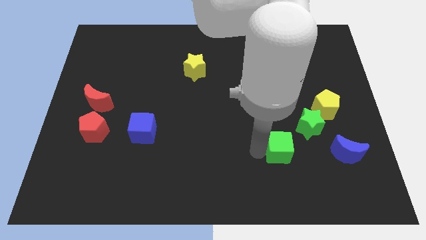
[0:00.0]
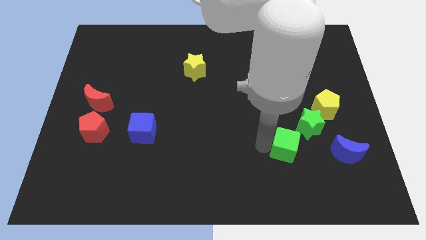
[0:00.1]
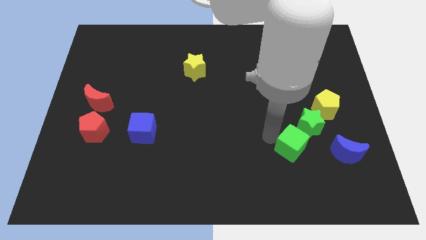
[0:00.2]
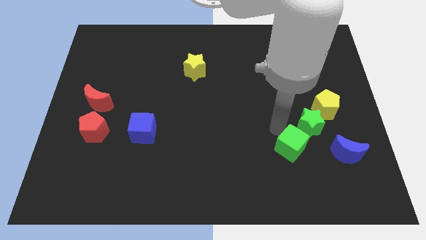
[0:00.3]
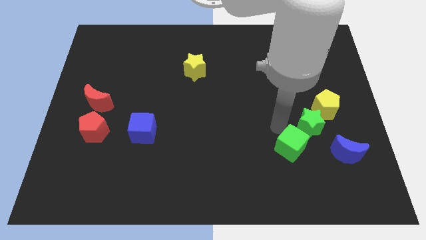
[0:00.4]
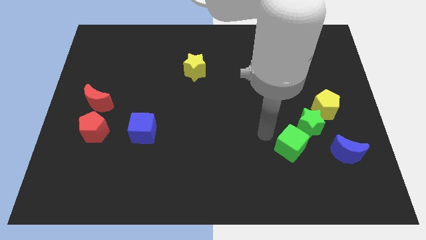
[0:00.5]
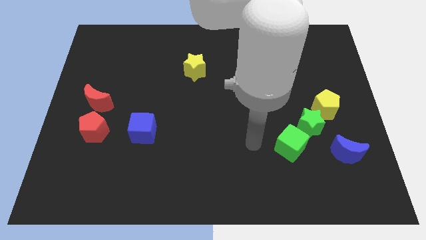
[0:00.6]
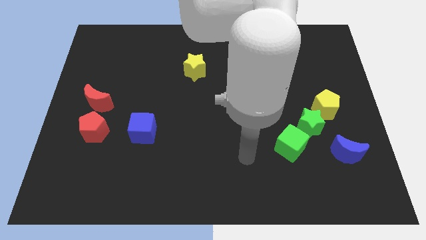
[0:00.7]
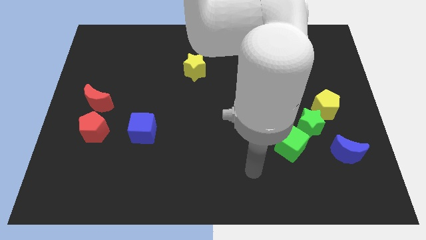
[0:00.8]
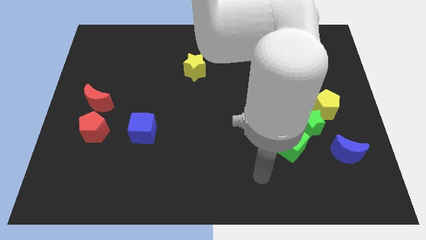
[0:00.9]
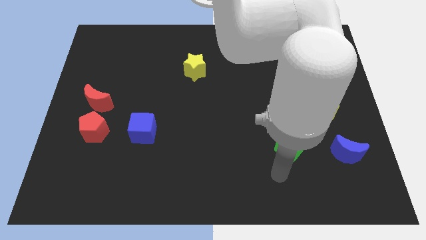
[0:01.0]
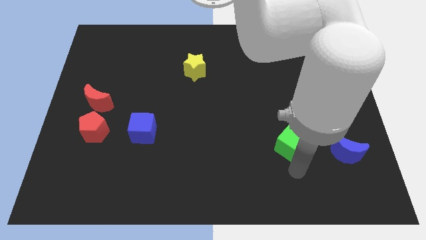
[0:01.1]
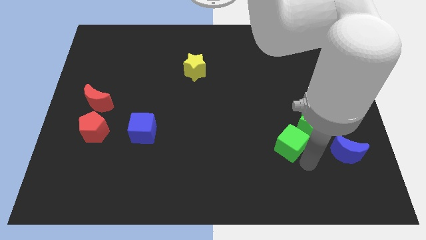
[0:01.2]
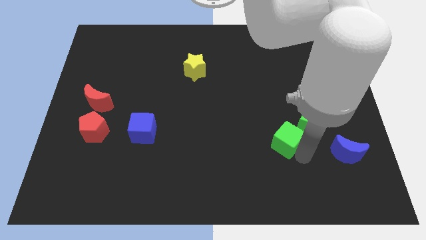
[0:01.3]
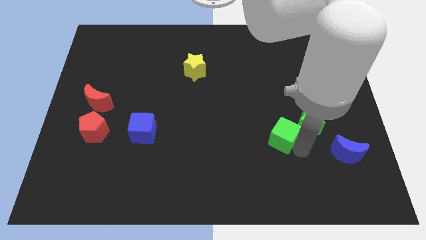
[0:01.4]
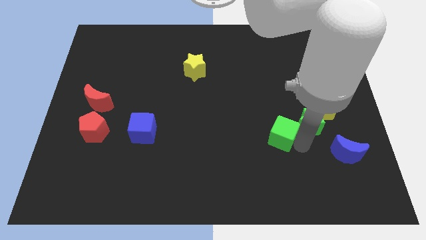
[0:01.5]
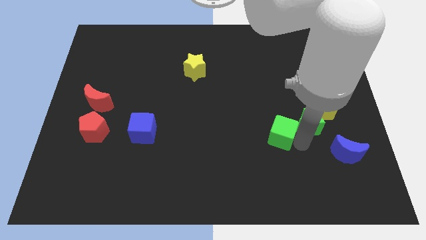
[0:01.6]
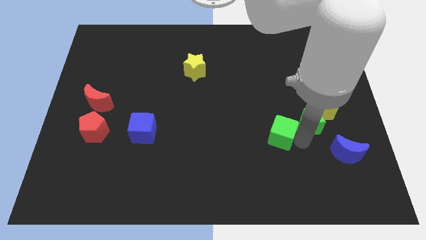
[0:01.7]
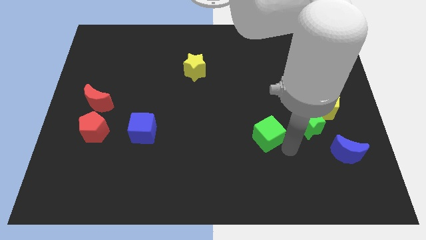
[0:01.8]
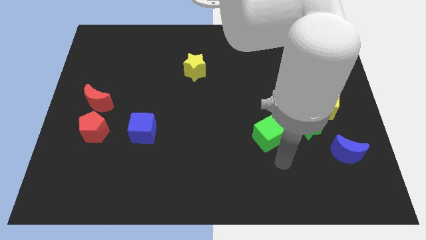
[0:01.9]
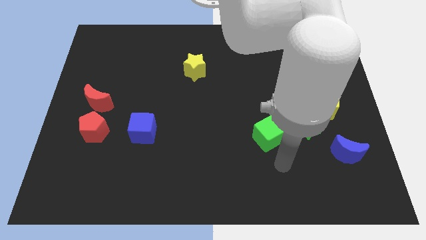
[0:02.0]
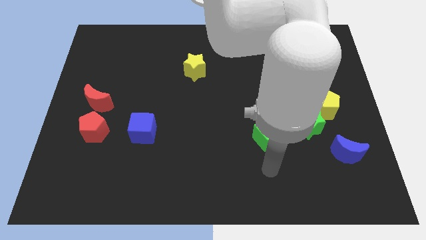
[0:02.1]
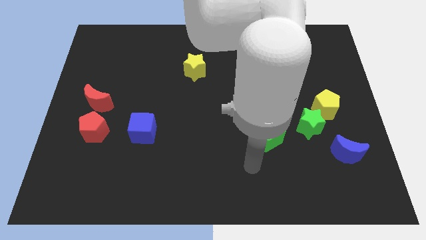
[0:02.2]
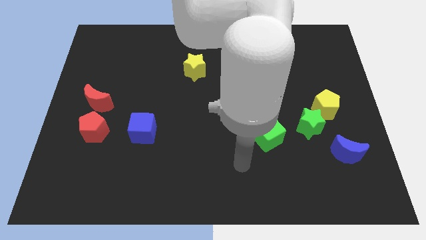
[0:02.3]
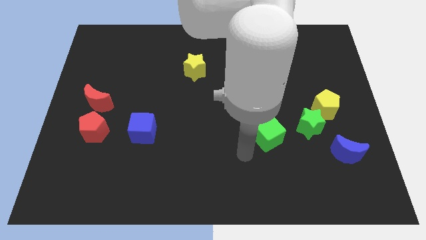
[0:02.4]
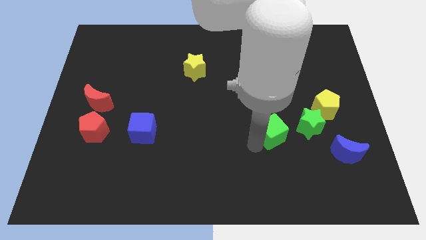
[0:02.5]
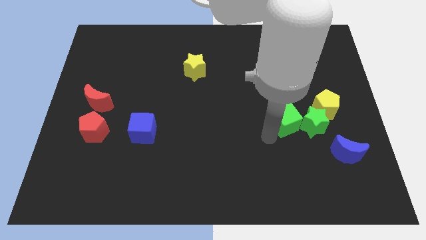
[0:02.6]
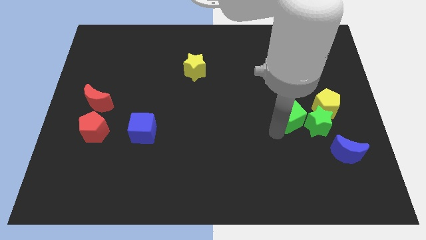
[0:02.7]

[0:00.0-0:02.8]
move green cube into green star

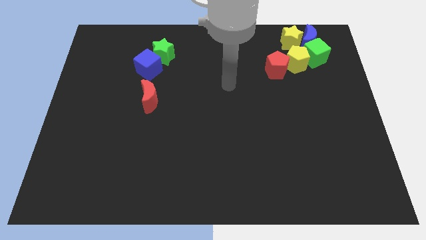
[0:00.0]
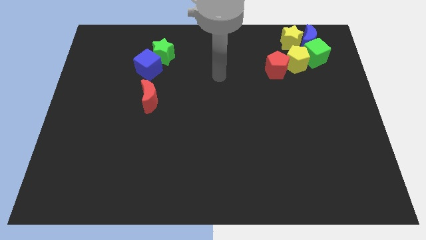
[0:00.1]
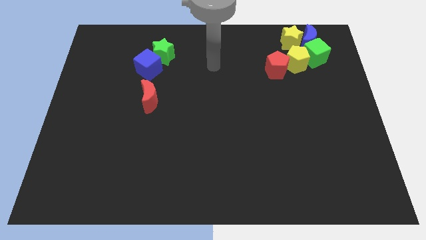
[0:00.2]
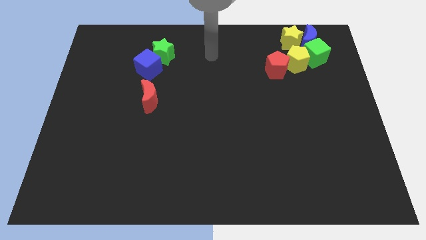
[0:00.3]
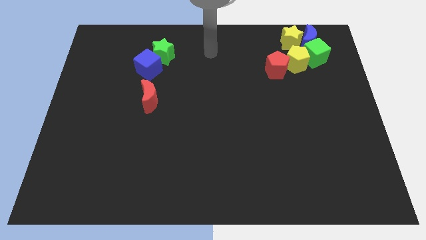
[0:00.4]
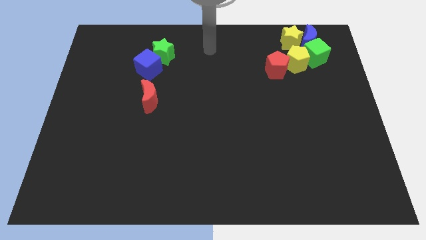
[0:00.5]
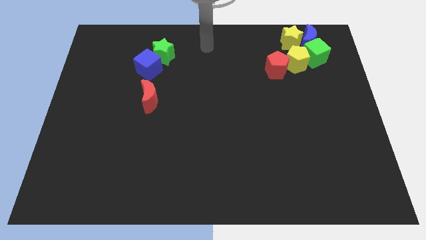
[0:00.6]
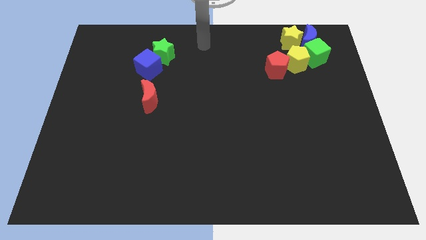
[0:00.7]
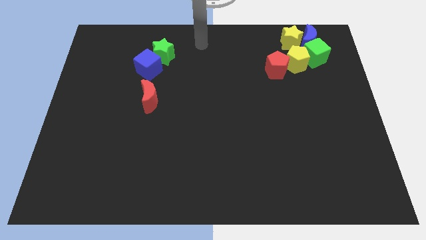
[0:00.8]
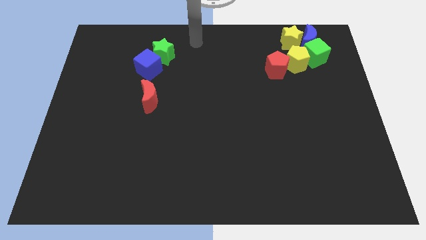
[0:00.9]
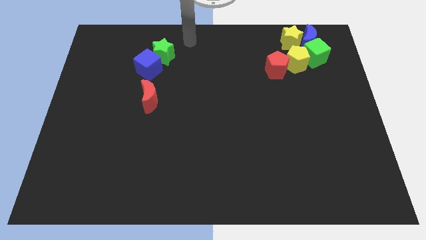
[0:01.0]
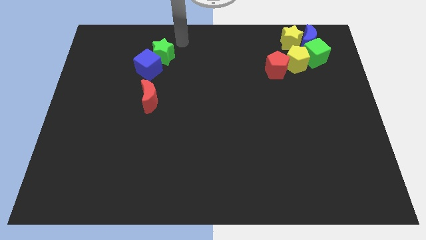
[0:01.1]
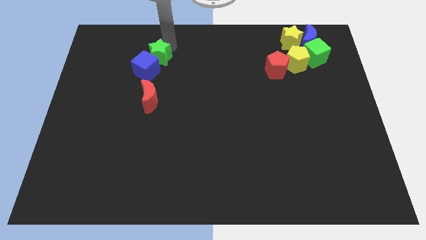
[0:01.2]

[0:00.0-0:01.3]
move your arm close to the top right of the green star

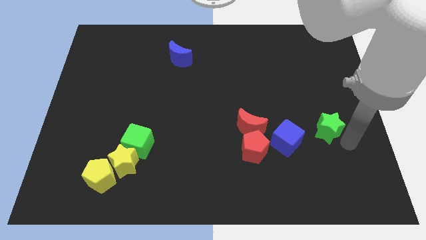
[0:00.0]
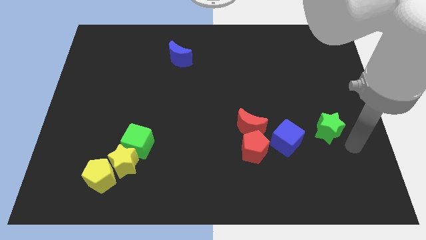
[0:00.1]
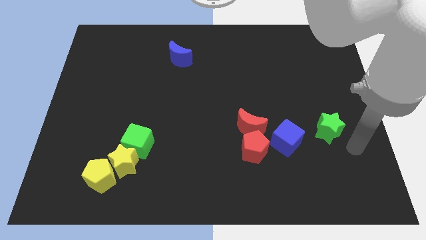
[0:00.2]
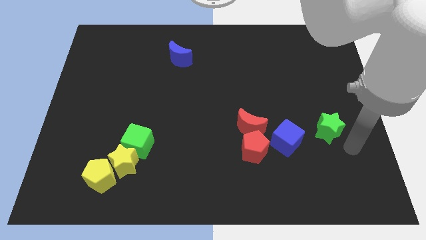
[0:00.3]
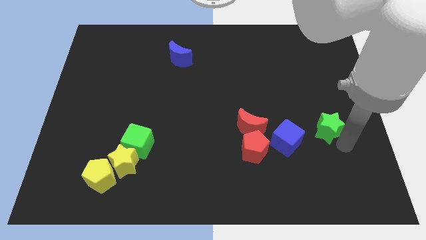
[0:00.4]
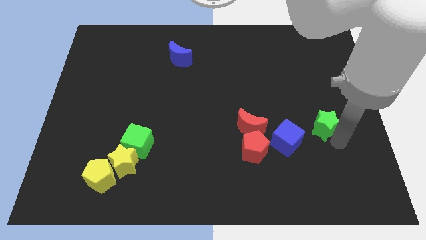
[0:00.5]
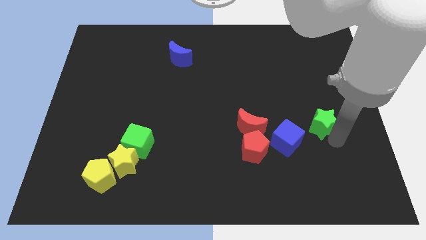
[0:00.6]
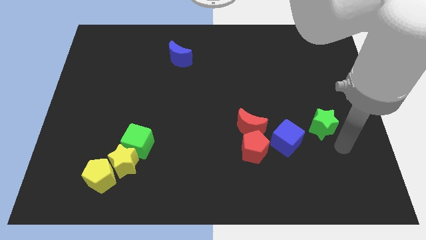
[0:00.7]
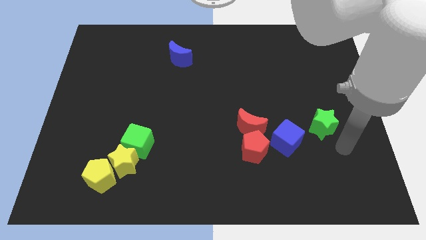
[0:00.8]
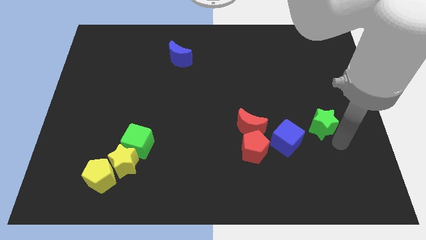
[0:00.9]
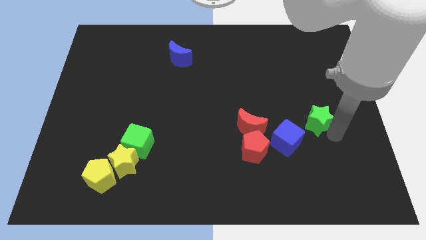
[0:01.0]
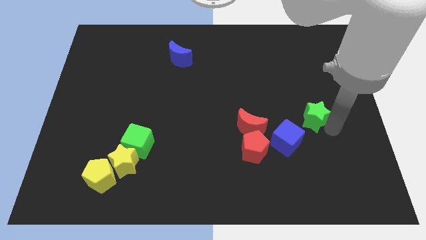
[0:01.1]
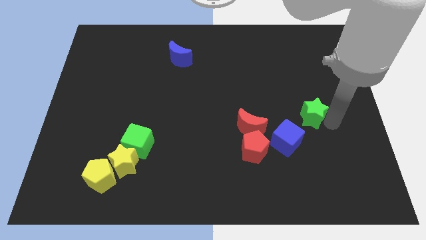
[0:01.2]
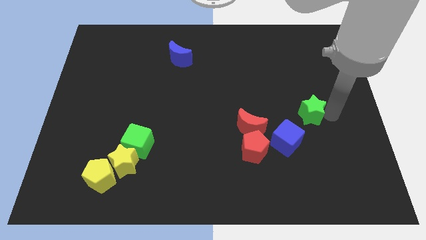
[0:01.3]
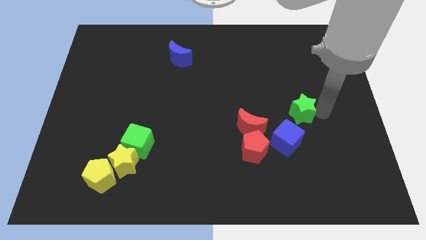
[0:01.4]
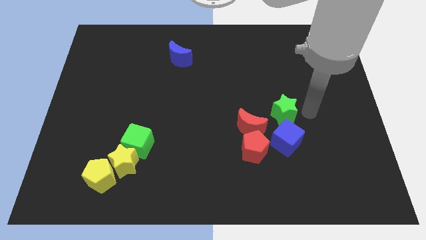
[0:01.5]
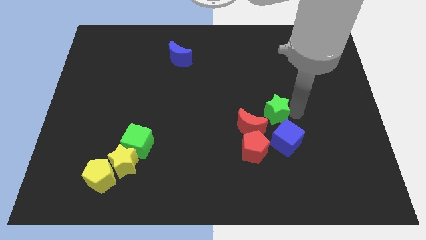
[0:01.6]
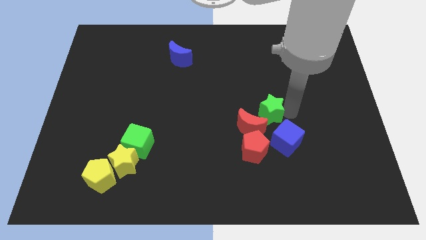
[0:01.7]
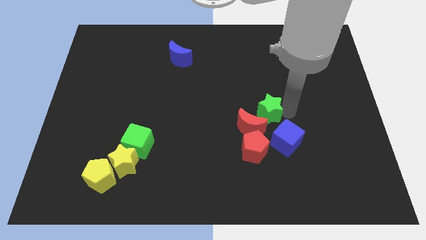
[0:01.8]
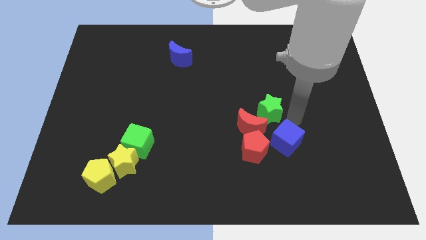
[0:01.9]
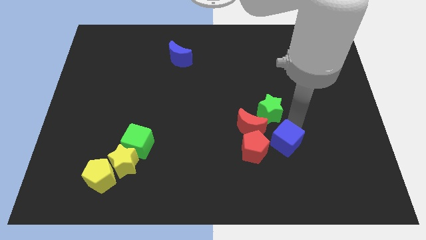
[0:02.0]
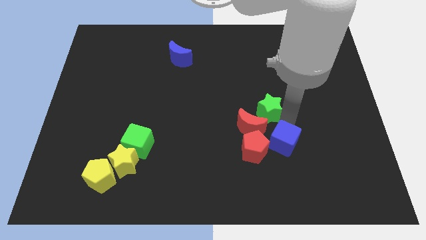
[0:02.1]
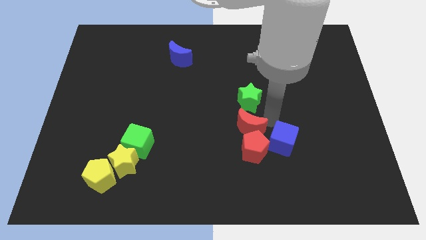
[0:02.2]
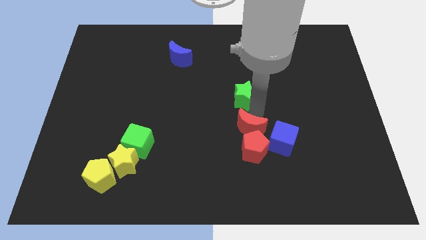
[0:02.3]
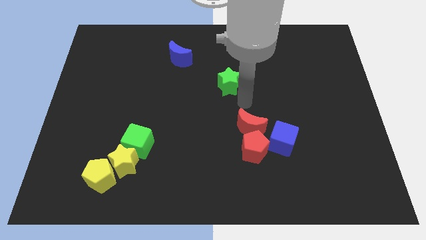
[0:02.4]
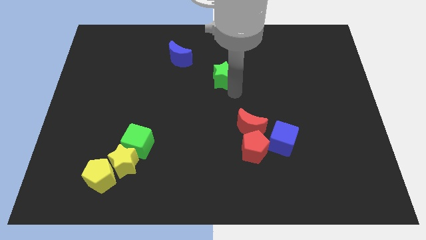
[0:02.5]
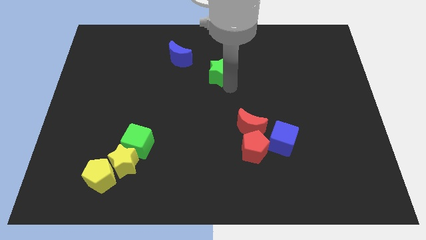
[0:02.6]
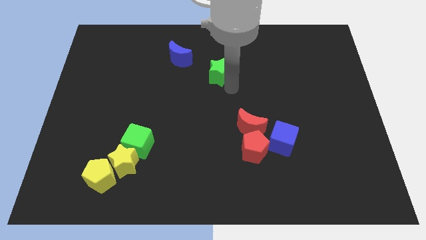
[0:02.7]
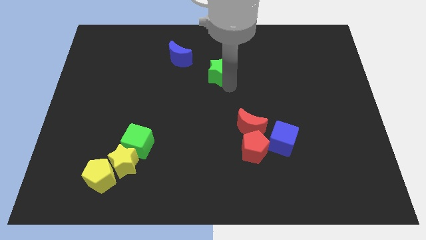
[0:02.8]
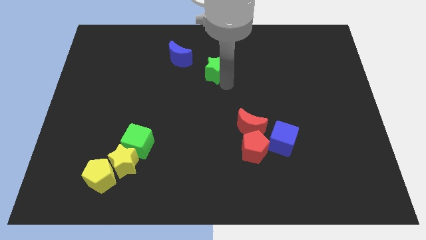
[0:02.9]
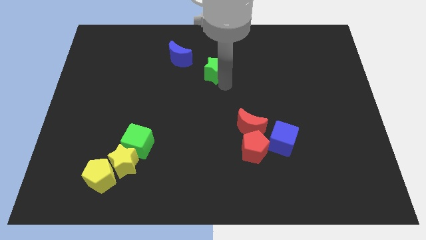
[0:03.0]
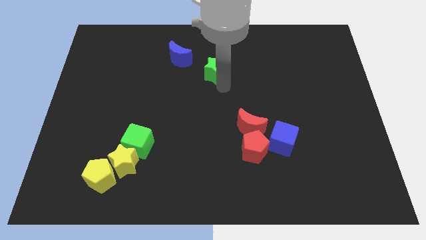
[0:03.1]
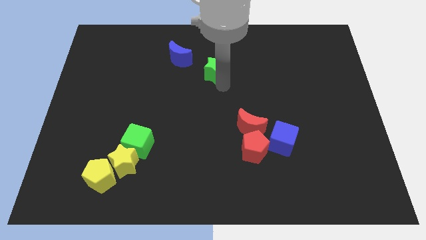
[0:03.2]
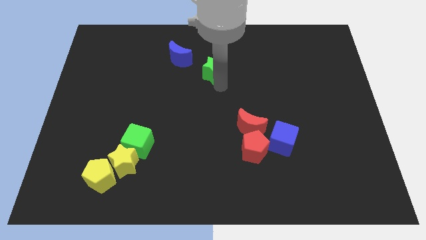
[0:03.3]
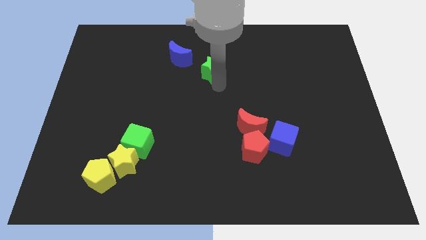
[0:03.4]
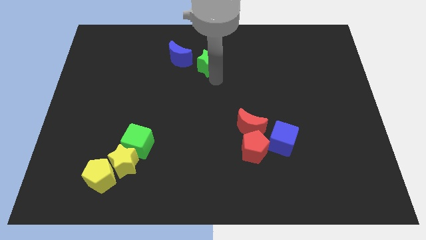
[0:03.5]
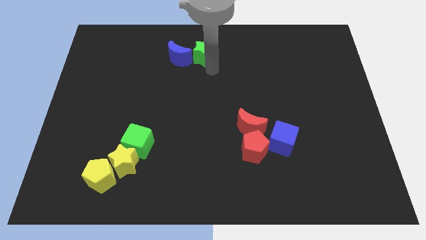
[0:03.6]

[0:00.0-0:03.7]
move the green star to the right of the blue crescent

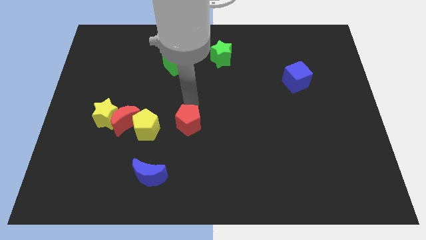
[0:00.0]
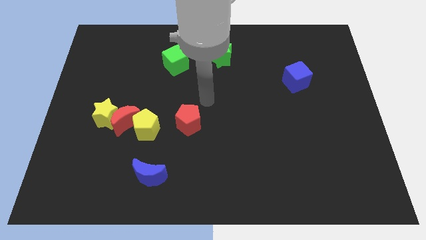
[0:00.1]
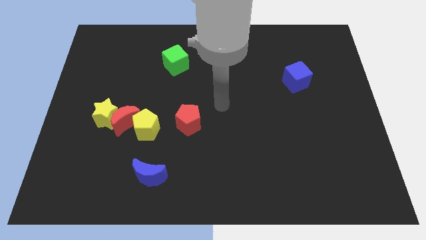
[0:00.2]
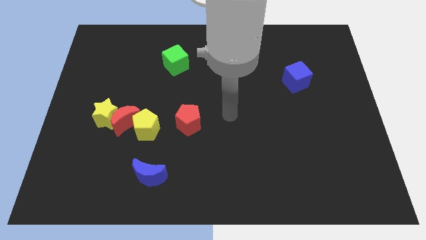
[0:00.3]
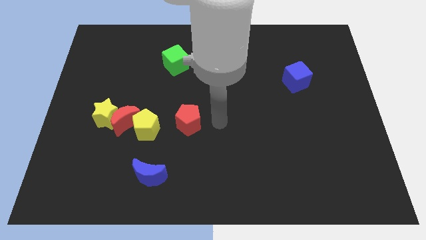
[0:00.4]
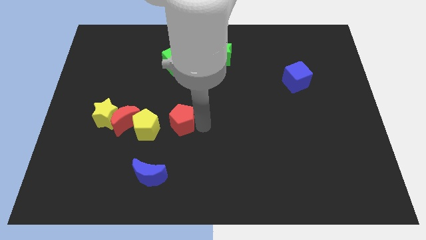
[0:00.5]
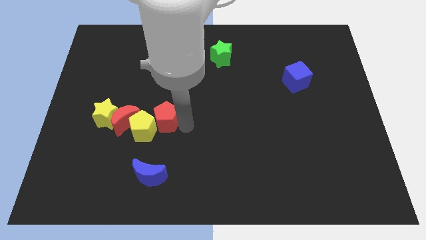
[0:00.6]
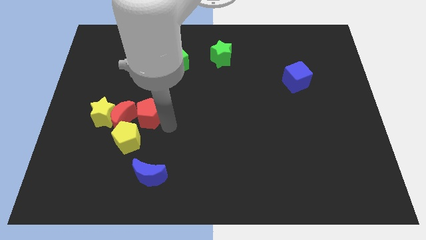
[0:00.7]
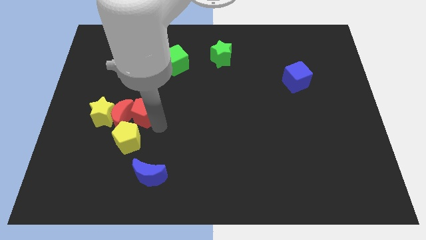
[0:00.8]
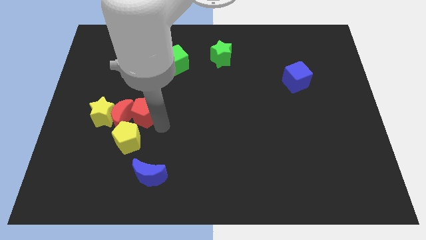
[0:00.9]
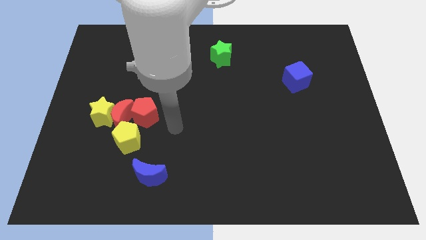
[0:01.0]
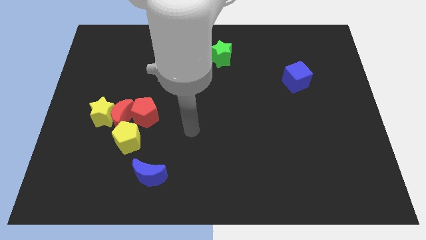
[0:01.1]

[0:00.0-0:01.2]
push the red pentagon into the red crescent
